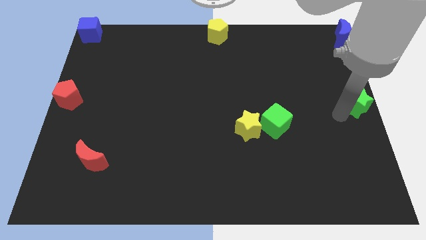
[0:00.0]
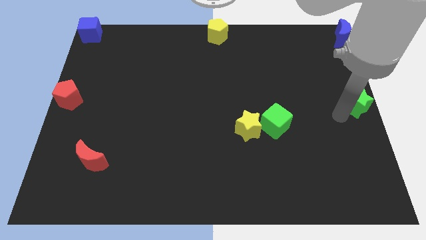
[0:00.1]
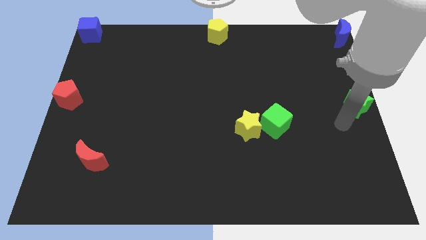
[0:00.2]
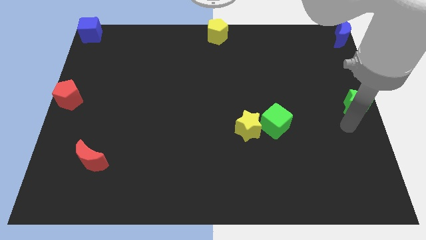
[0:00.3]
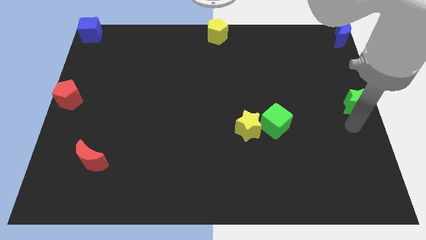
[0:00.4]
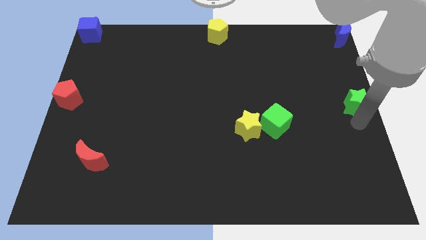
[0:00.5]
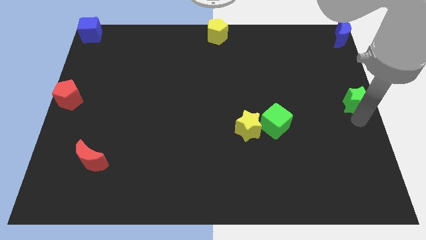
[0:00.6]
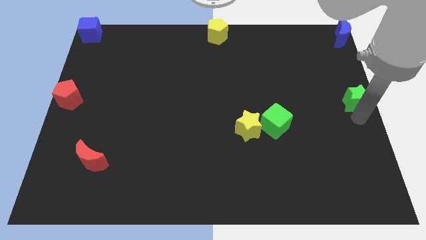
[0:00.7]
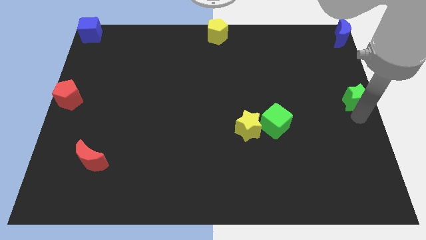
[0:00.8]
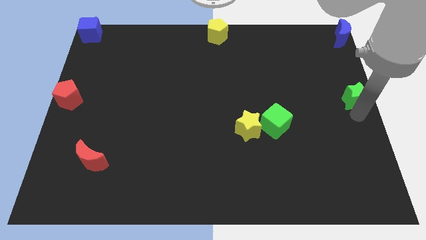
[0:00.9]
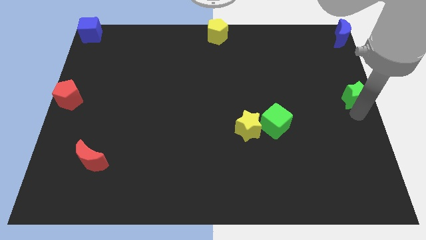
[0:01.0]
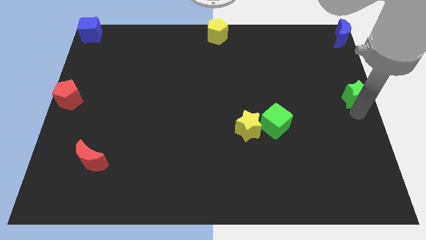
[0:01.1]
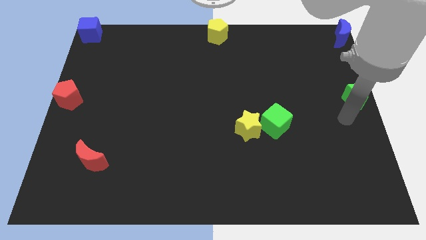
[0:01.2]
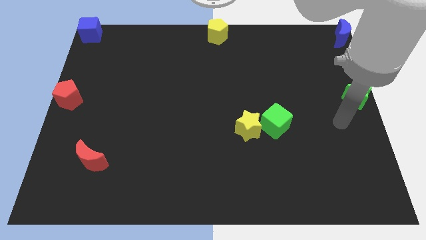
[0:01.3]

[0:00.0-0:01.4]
slightly move the green star to the right center

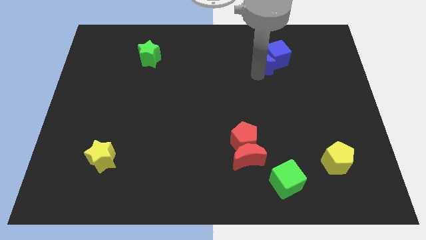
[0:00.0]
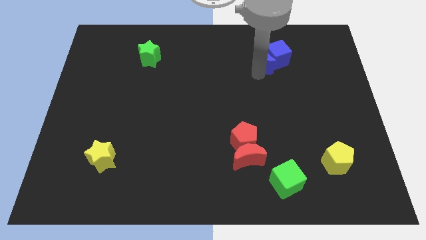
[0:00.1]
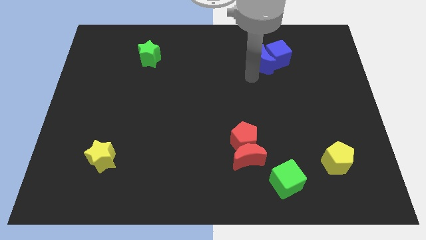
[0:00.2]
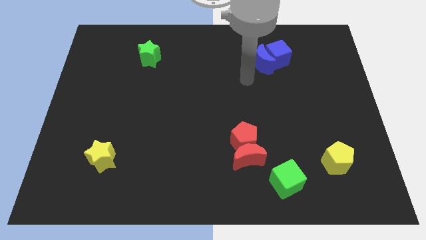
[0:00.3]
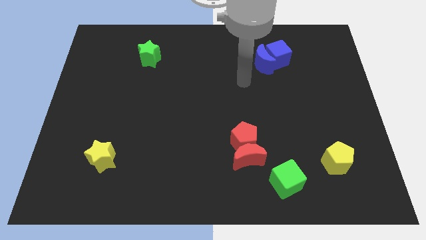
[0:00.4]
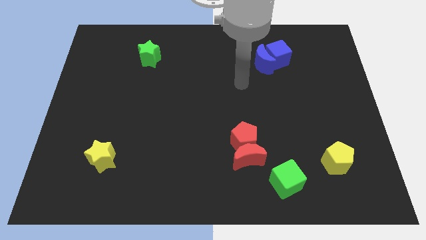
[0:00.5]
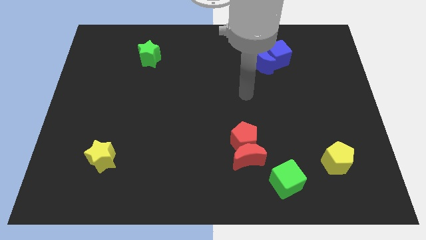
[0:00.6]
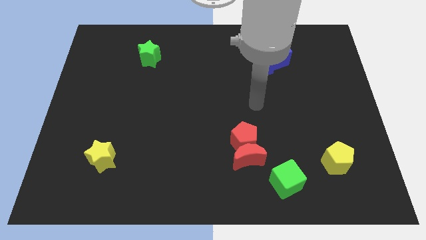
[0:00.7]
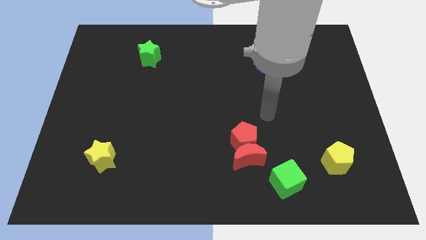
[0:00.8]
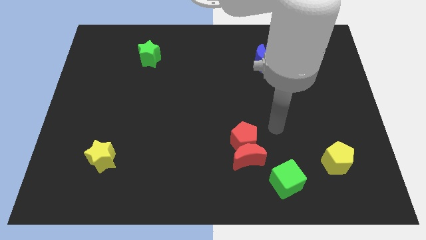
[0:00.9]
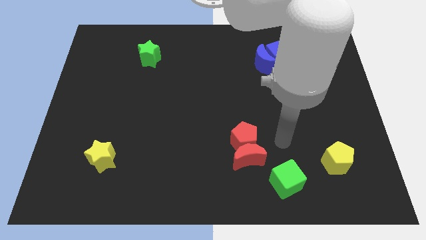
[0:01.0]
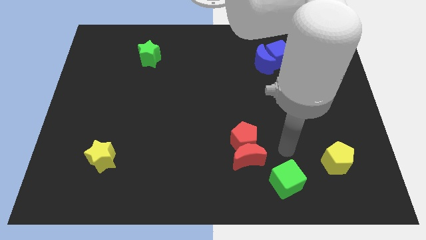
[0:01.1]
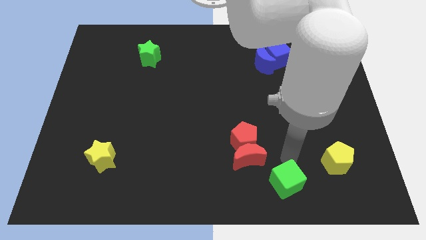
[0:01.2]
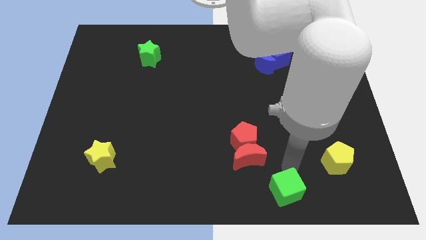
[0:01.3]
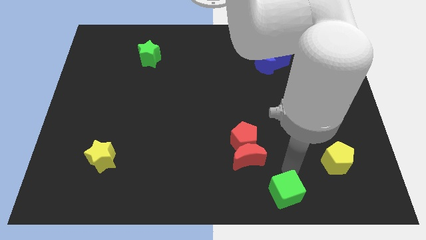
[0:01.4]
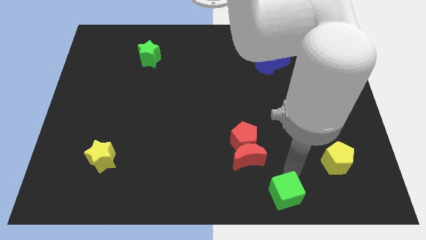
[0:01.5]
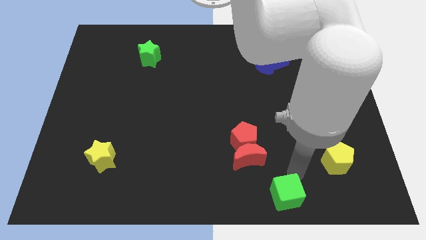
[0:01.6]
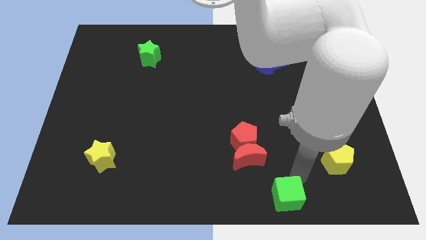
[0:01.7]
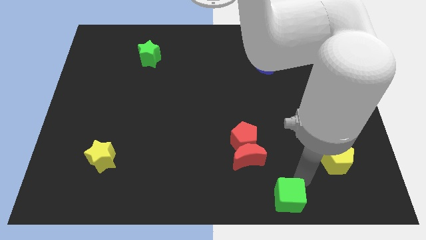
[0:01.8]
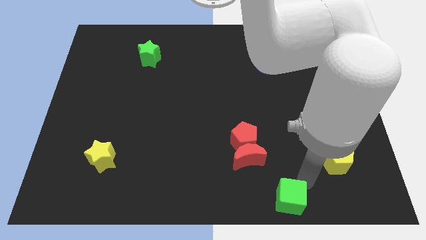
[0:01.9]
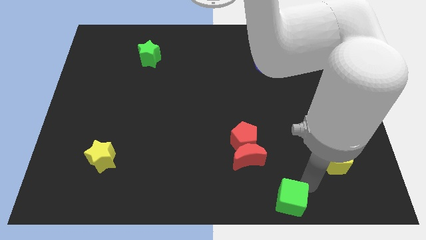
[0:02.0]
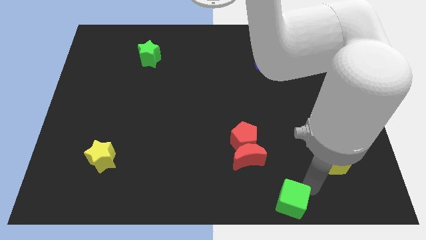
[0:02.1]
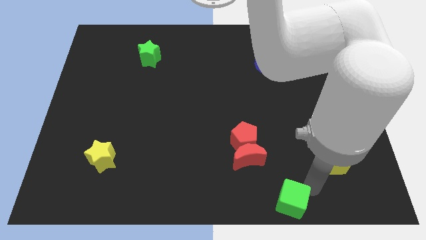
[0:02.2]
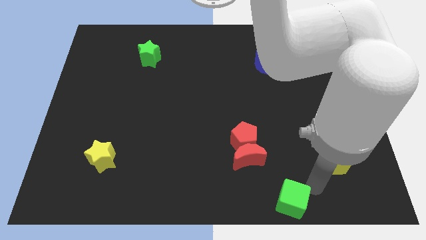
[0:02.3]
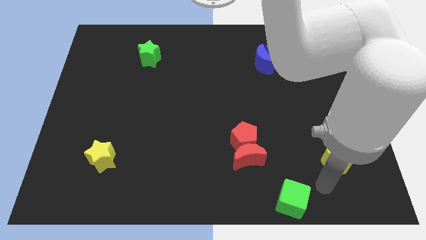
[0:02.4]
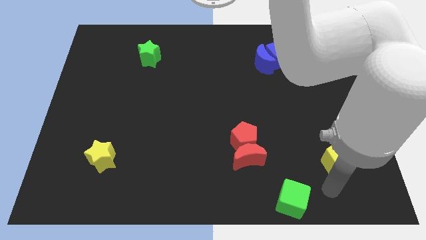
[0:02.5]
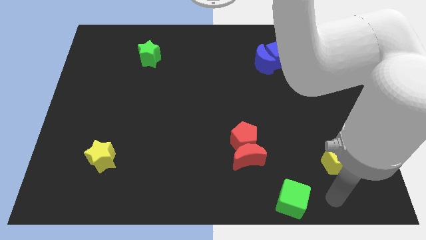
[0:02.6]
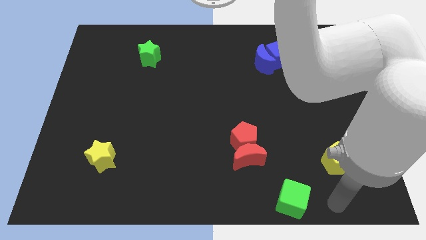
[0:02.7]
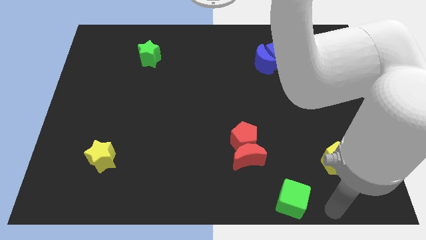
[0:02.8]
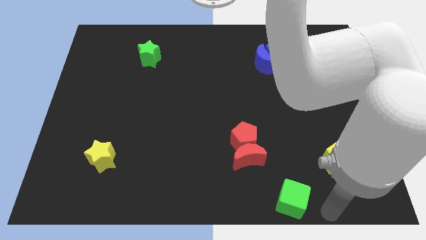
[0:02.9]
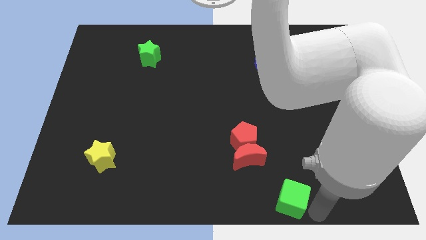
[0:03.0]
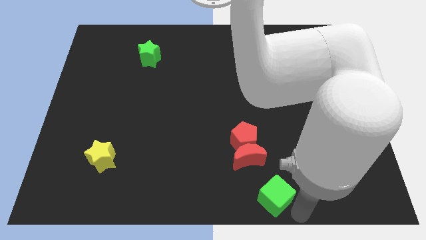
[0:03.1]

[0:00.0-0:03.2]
push the green cube to the bottom of the board

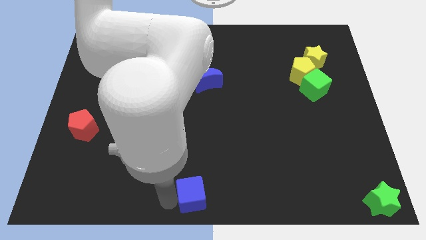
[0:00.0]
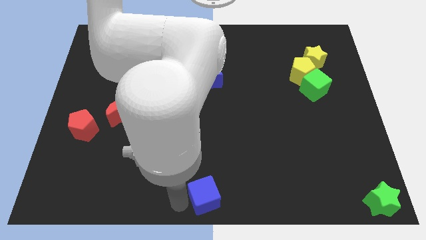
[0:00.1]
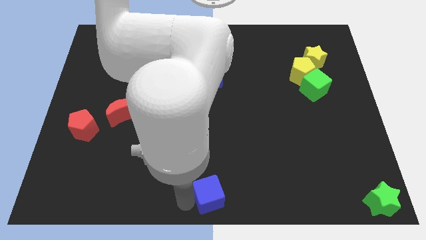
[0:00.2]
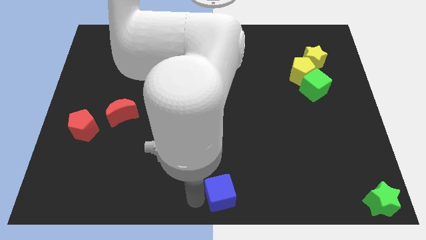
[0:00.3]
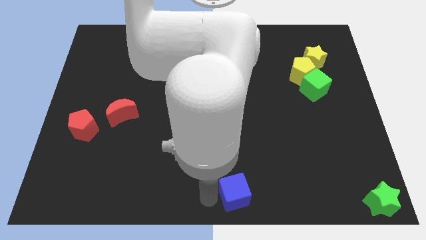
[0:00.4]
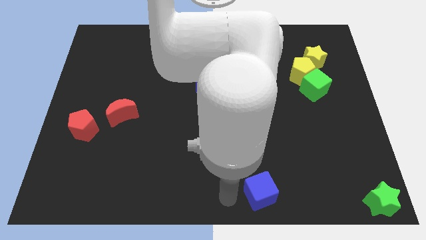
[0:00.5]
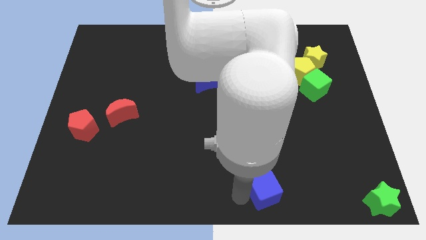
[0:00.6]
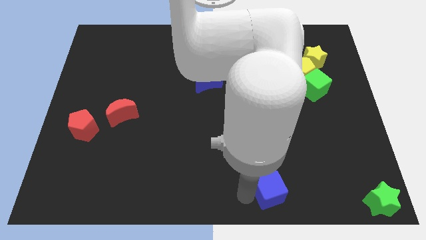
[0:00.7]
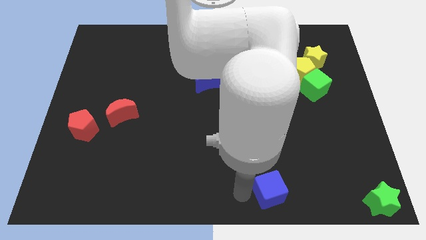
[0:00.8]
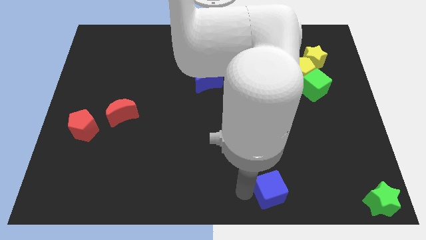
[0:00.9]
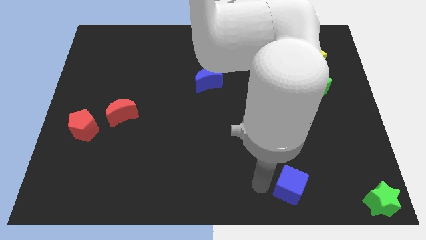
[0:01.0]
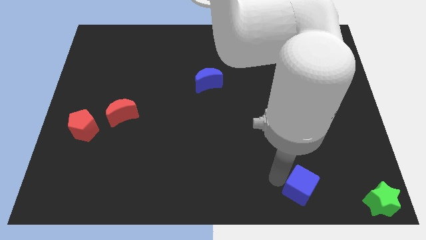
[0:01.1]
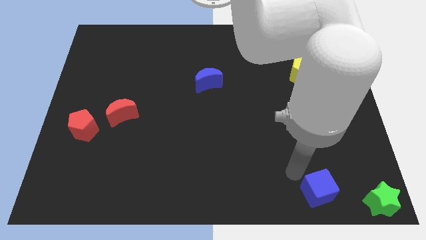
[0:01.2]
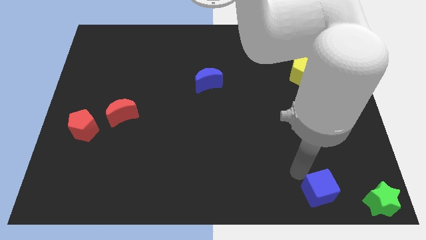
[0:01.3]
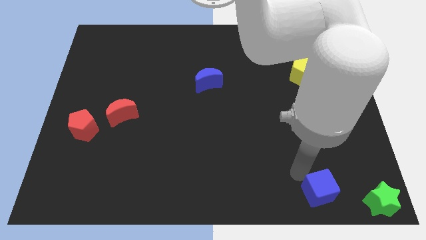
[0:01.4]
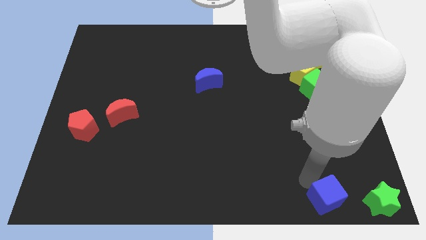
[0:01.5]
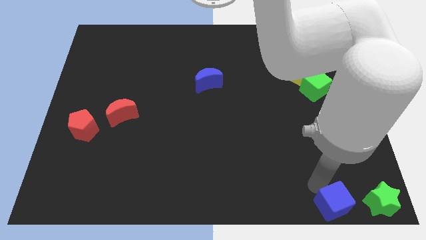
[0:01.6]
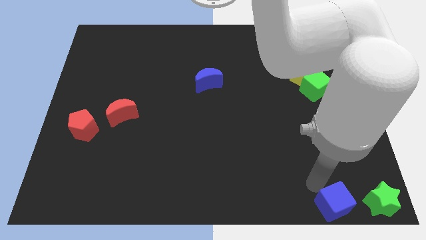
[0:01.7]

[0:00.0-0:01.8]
place the blue cube to the left of the green star

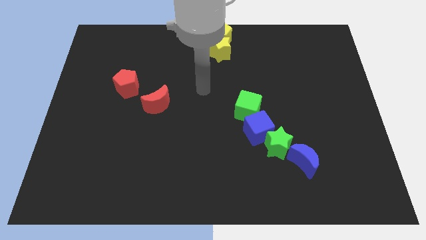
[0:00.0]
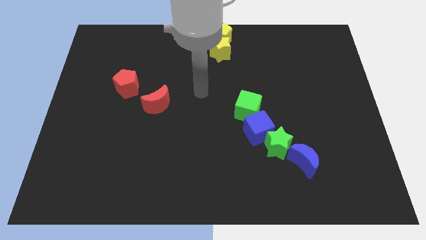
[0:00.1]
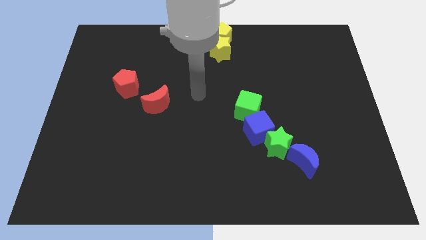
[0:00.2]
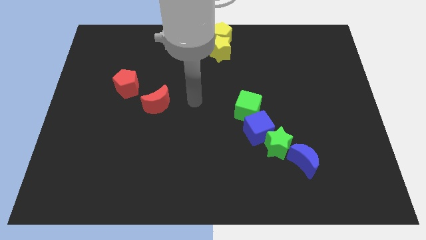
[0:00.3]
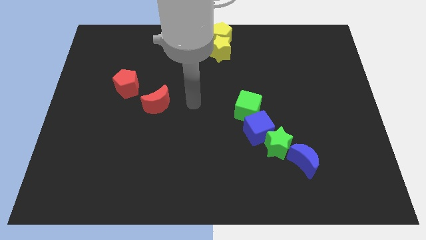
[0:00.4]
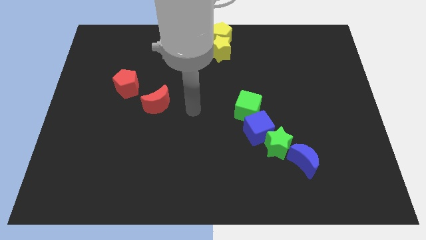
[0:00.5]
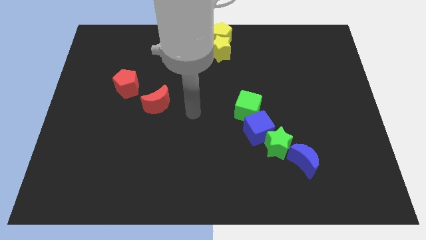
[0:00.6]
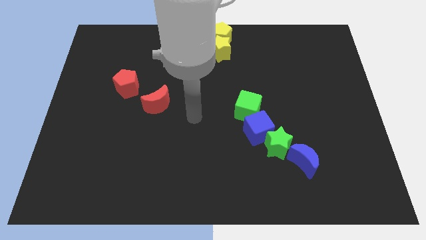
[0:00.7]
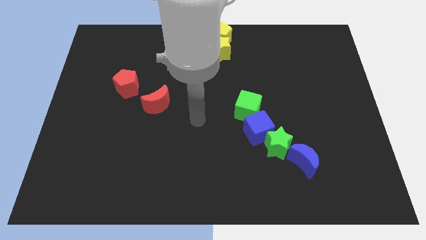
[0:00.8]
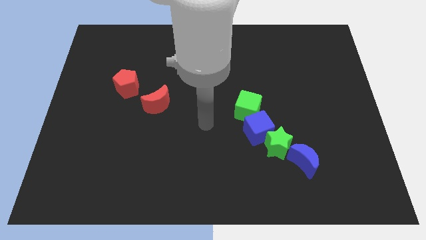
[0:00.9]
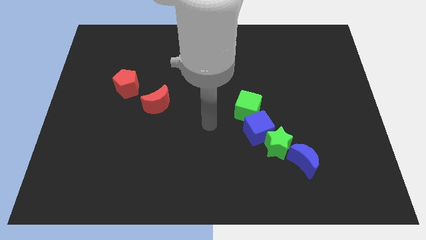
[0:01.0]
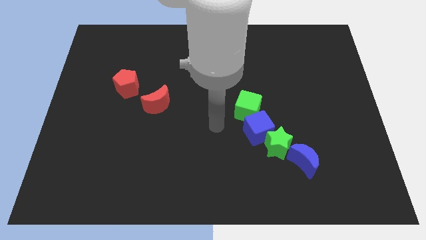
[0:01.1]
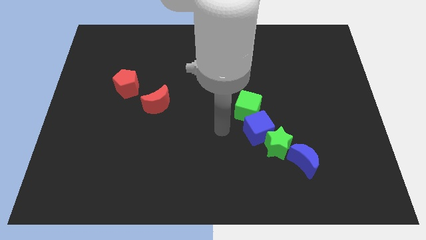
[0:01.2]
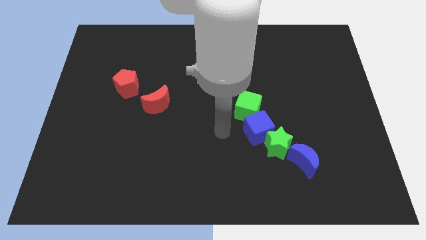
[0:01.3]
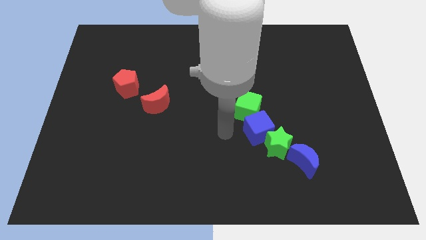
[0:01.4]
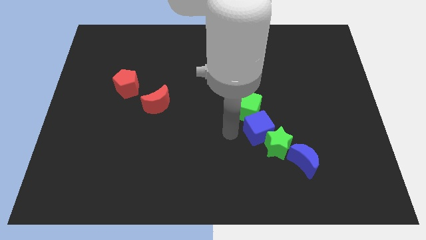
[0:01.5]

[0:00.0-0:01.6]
place your arm at the left of the blue cube

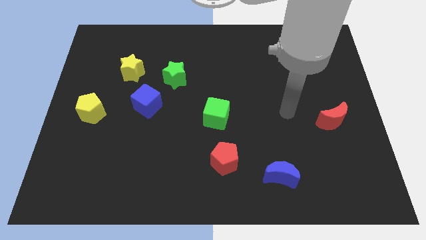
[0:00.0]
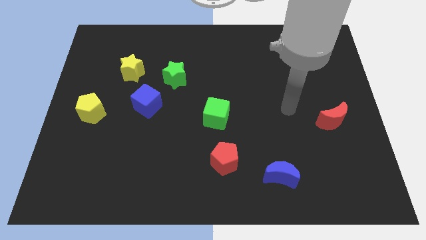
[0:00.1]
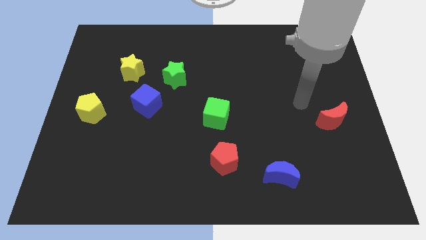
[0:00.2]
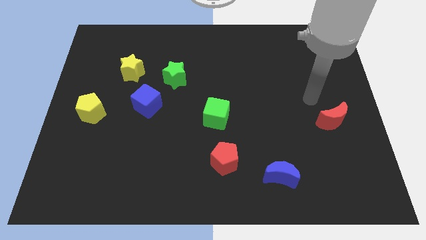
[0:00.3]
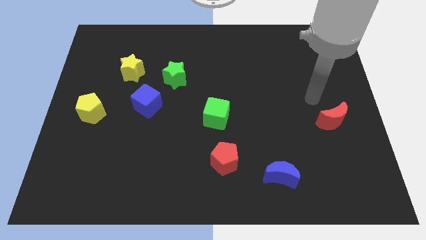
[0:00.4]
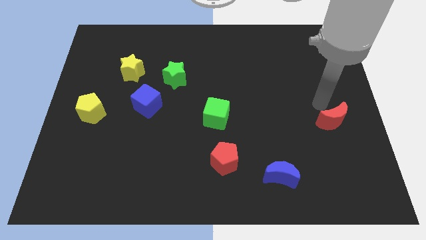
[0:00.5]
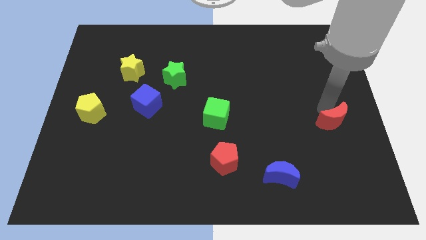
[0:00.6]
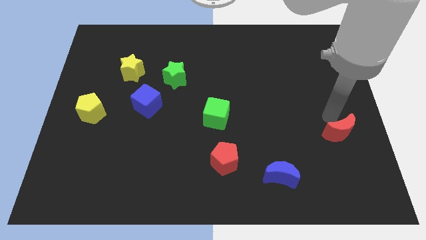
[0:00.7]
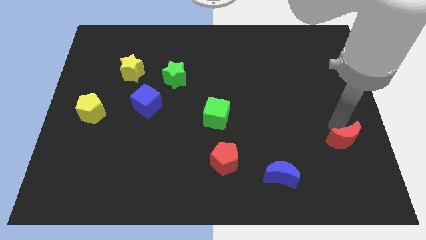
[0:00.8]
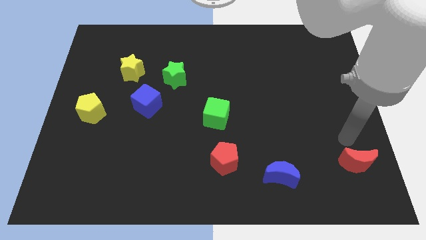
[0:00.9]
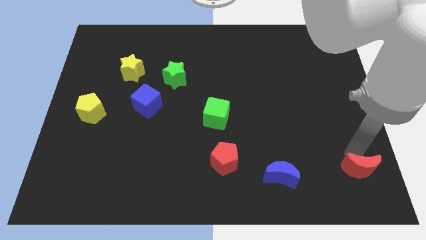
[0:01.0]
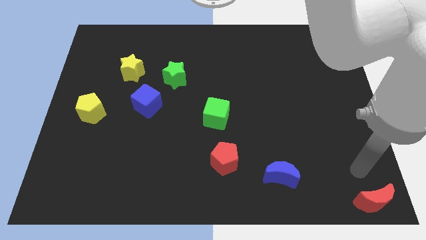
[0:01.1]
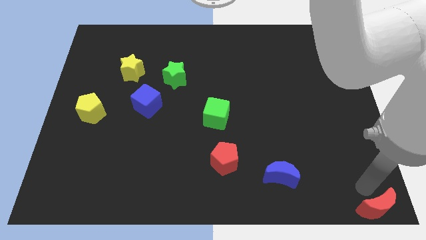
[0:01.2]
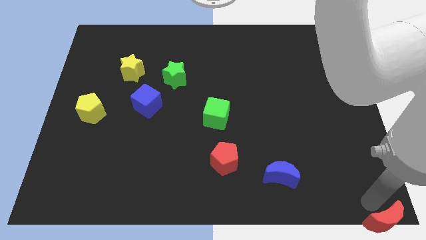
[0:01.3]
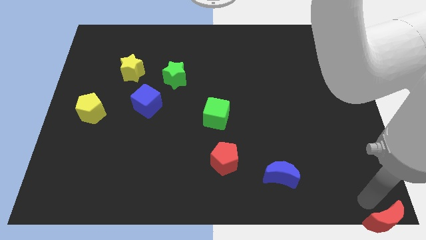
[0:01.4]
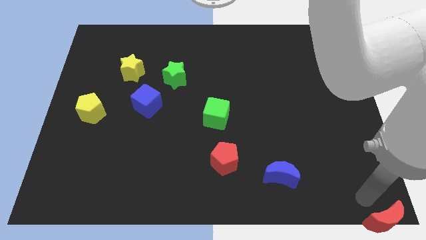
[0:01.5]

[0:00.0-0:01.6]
move the red moon towards the bottom
